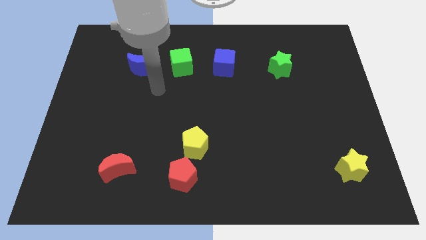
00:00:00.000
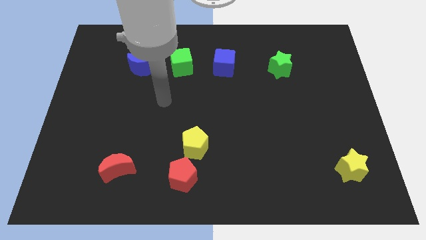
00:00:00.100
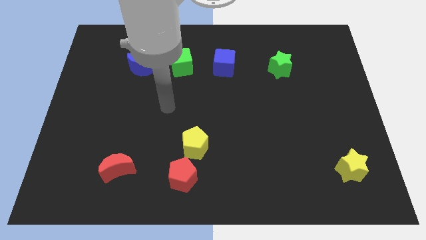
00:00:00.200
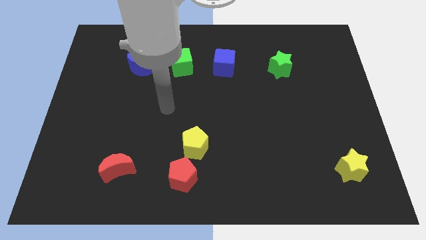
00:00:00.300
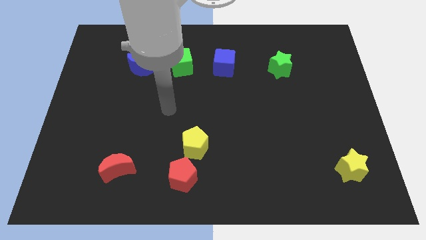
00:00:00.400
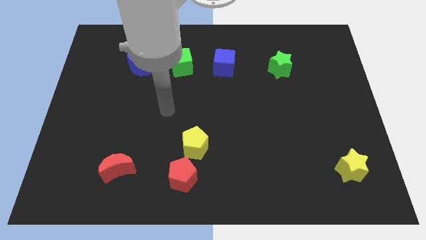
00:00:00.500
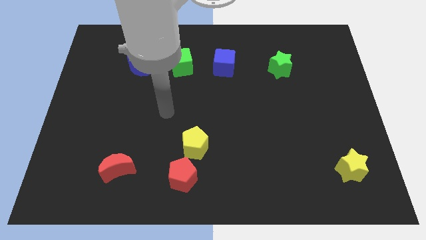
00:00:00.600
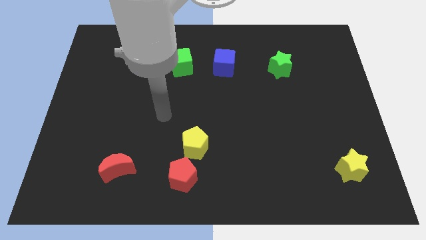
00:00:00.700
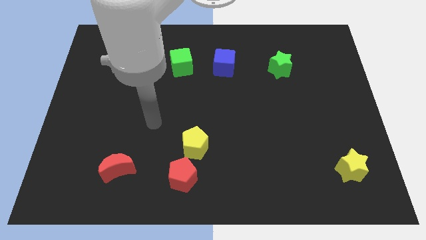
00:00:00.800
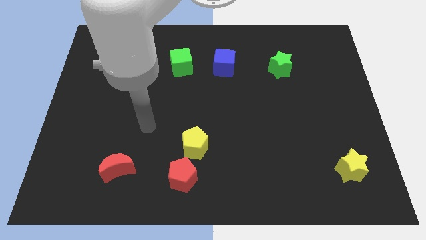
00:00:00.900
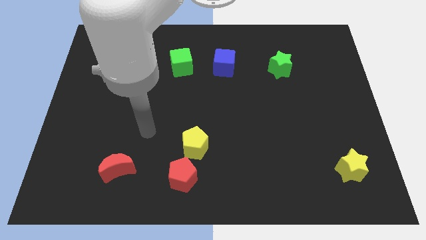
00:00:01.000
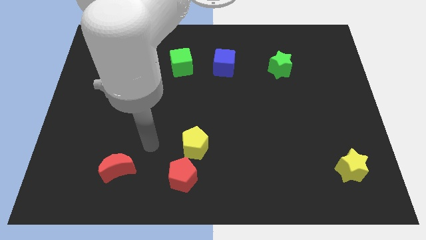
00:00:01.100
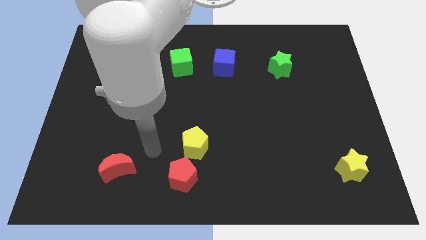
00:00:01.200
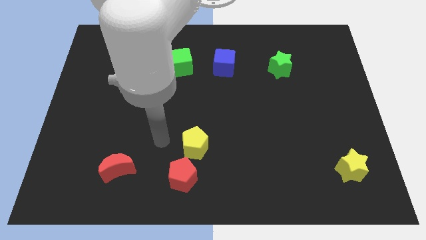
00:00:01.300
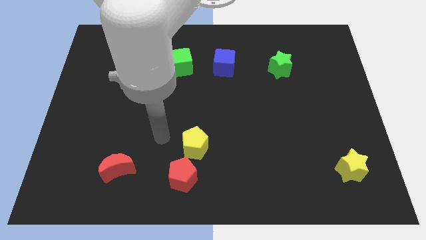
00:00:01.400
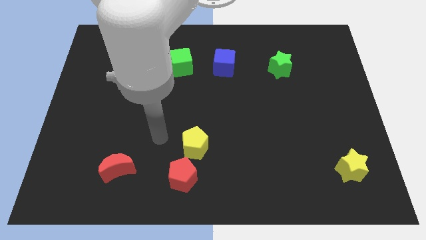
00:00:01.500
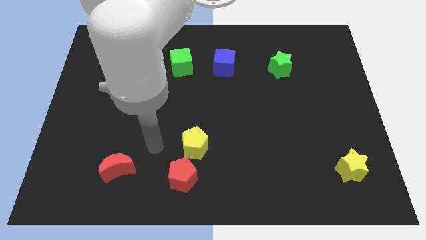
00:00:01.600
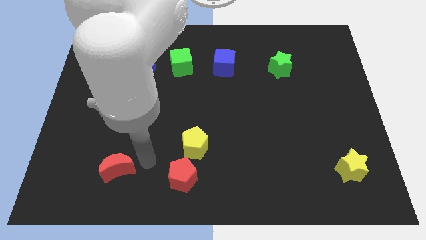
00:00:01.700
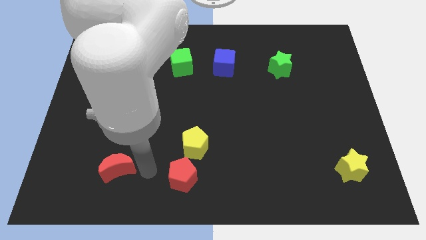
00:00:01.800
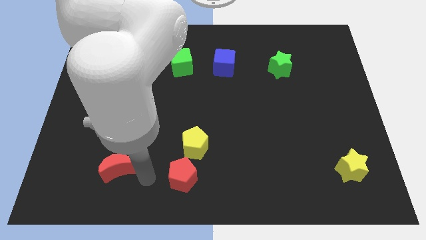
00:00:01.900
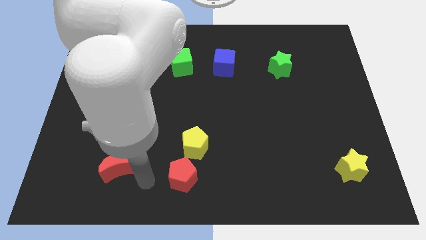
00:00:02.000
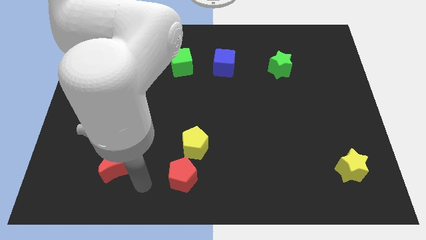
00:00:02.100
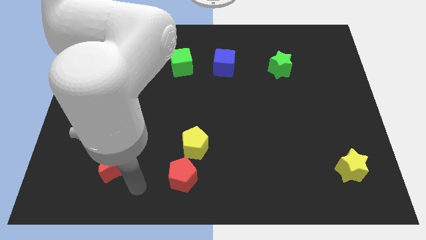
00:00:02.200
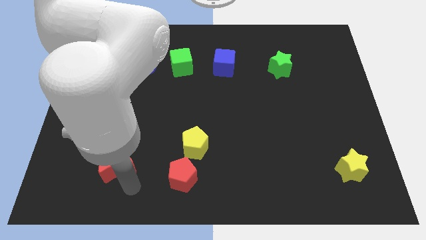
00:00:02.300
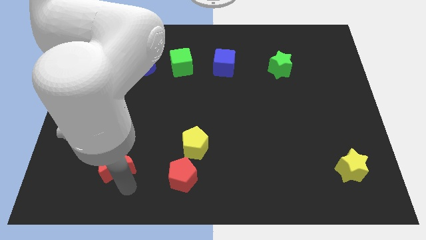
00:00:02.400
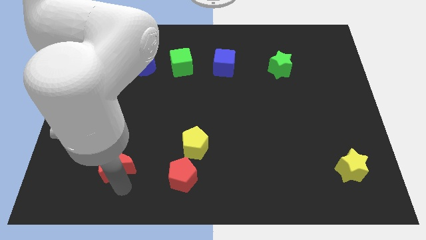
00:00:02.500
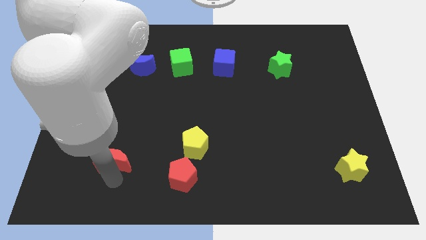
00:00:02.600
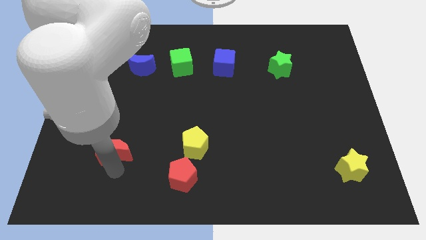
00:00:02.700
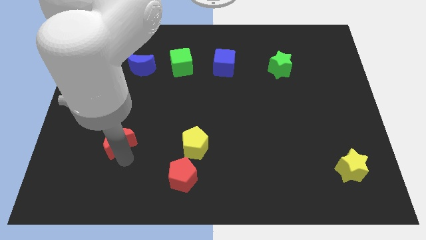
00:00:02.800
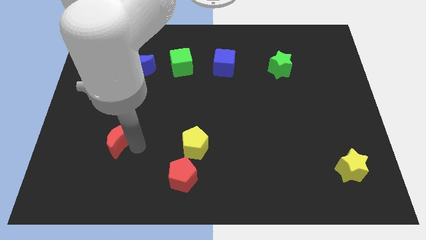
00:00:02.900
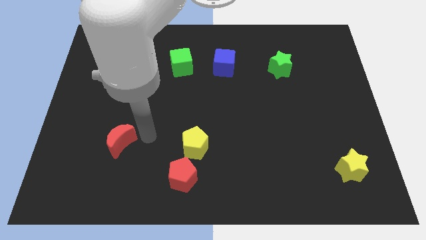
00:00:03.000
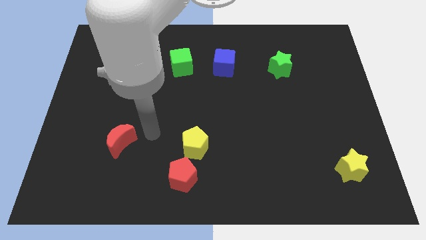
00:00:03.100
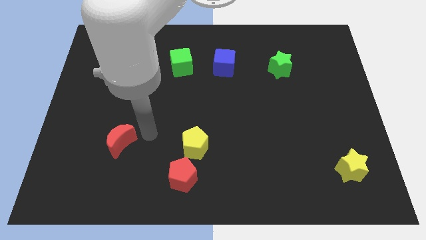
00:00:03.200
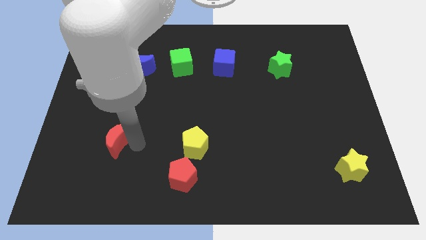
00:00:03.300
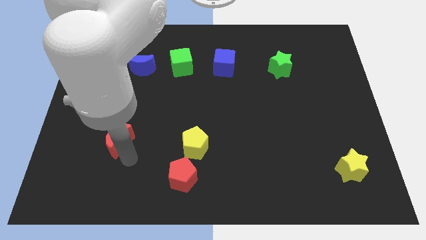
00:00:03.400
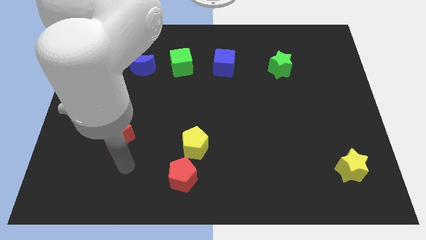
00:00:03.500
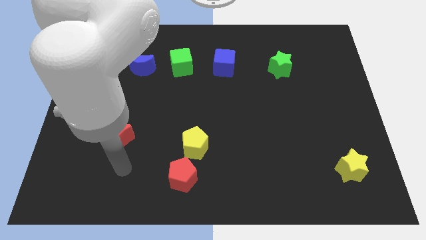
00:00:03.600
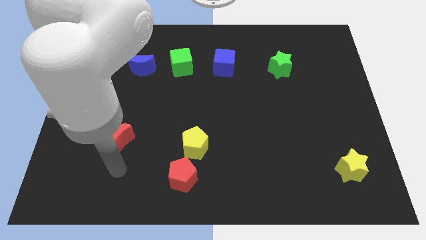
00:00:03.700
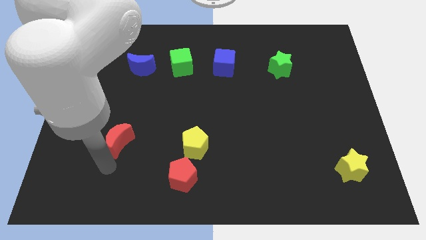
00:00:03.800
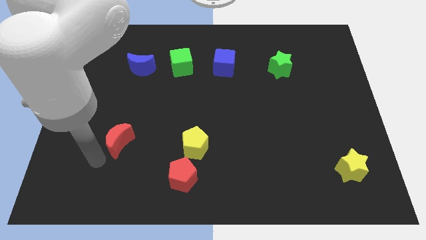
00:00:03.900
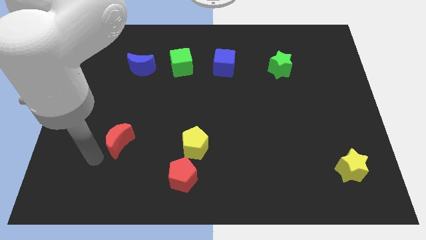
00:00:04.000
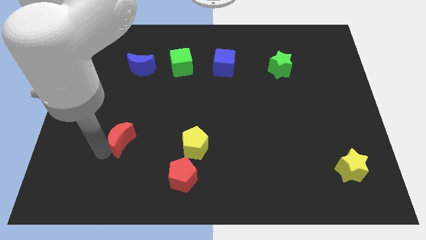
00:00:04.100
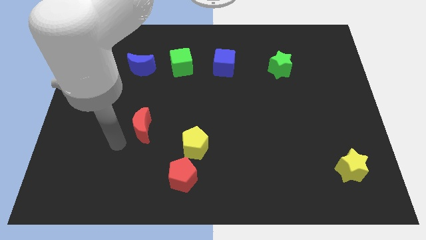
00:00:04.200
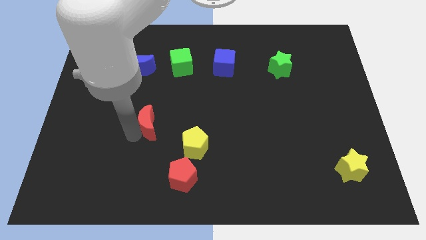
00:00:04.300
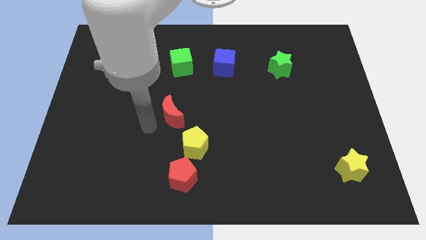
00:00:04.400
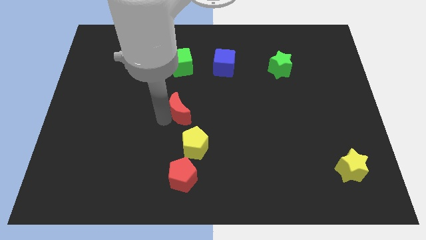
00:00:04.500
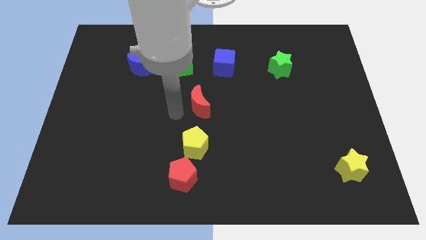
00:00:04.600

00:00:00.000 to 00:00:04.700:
move the red moon vertically above the yellow pentagon

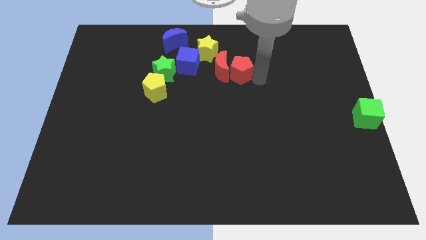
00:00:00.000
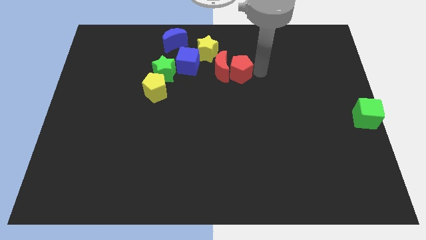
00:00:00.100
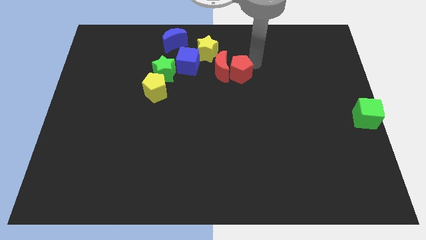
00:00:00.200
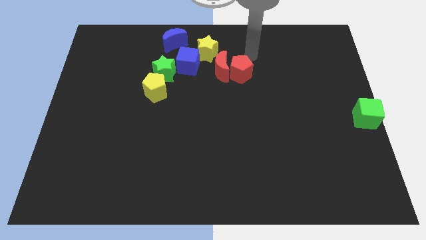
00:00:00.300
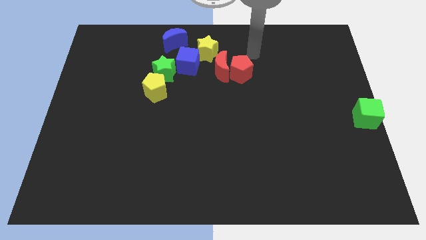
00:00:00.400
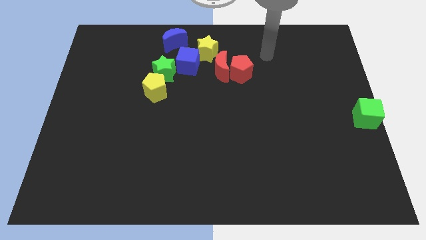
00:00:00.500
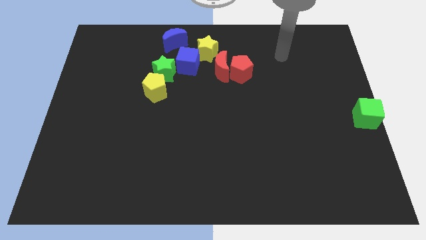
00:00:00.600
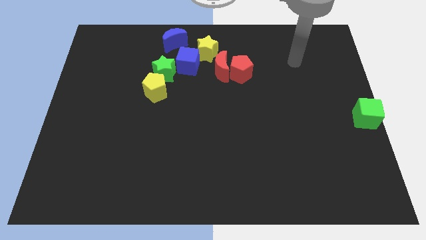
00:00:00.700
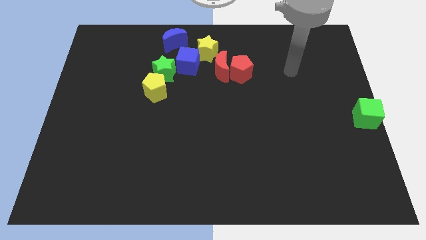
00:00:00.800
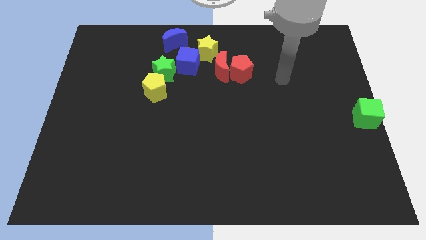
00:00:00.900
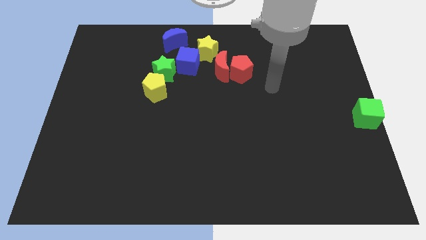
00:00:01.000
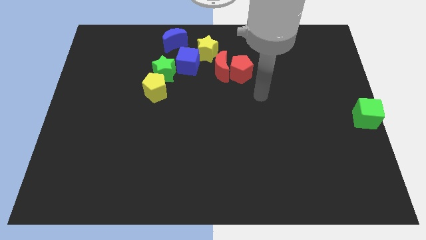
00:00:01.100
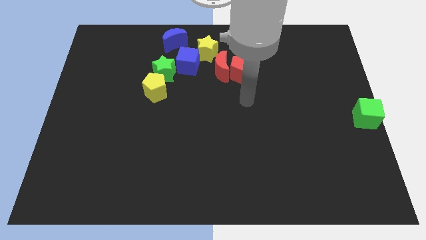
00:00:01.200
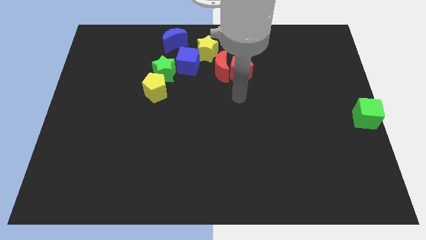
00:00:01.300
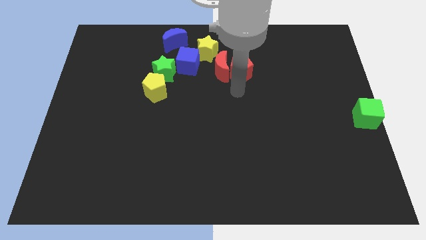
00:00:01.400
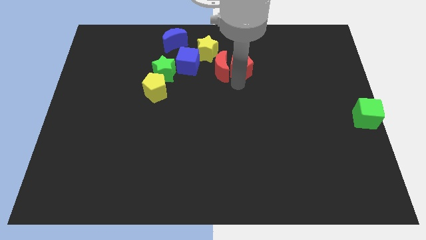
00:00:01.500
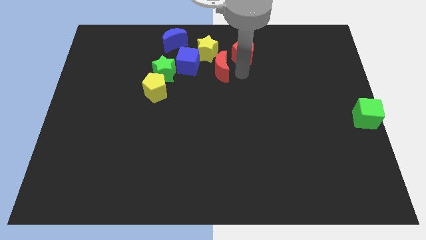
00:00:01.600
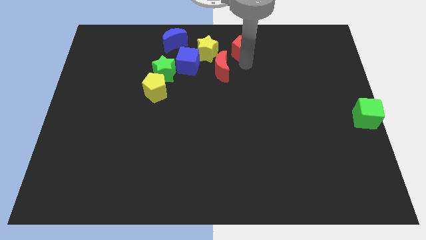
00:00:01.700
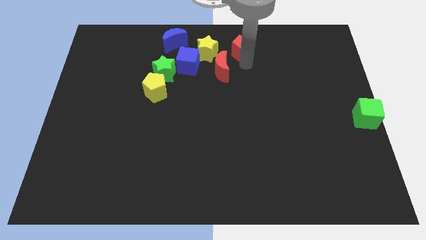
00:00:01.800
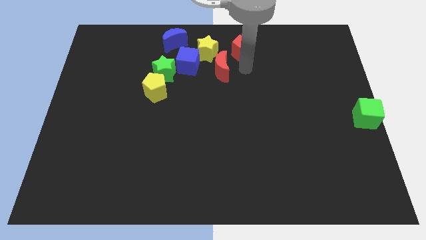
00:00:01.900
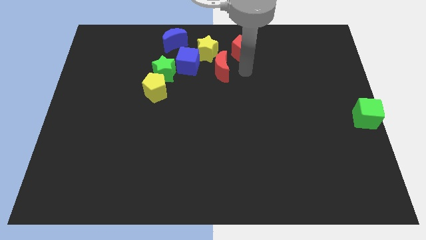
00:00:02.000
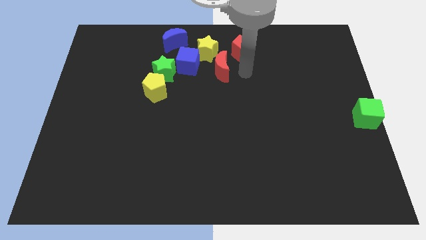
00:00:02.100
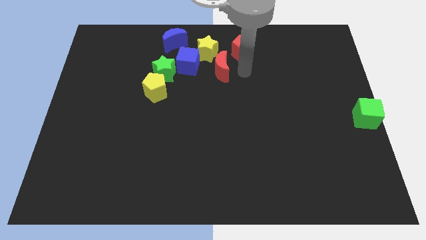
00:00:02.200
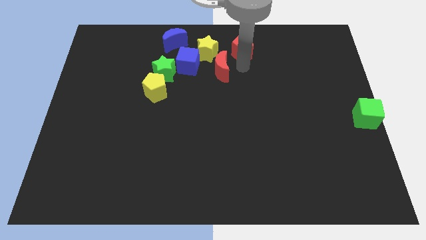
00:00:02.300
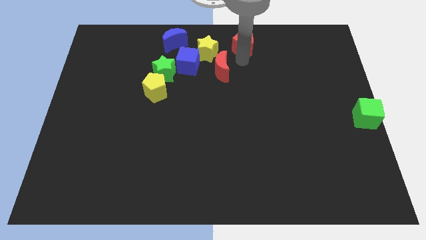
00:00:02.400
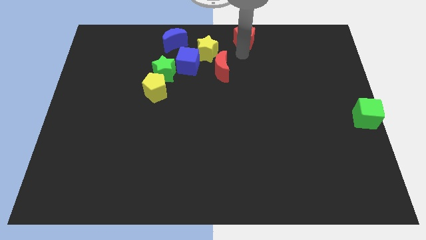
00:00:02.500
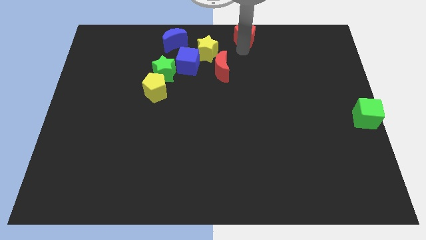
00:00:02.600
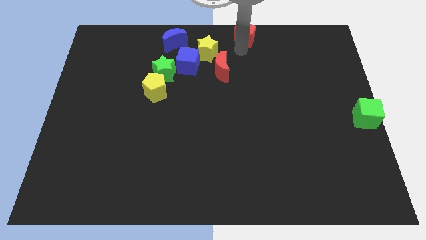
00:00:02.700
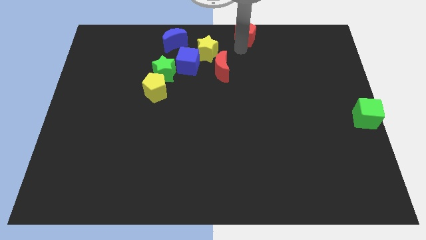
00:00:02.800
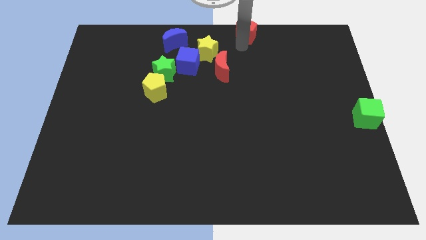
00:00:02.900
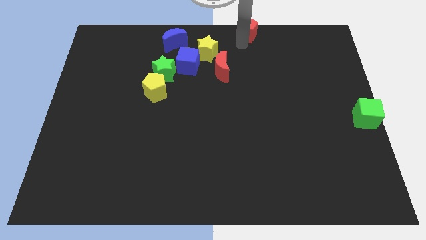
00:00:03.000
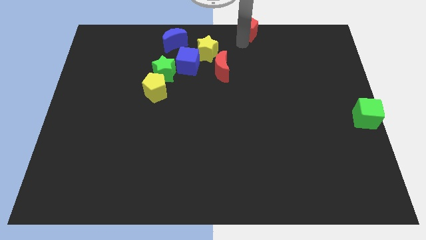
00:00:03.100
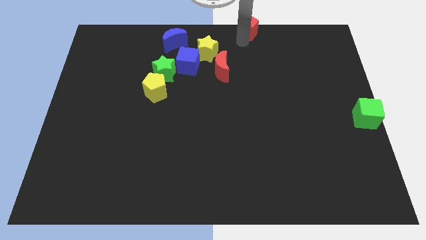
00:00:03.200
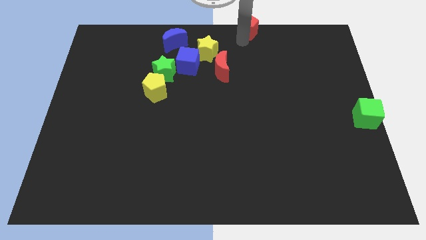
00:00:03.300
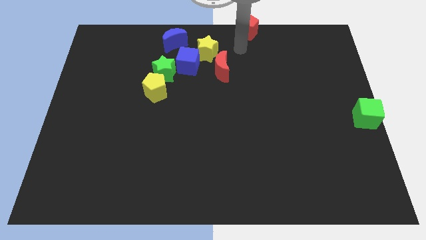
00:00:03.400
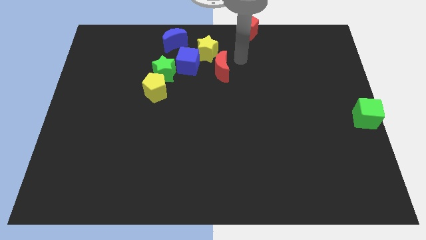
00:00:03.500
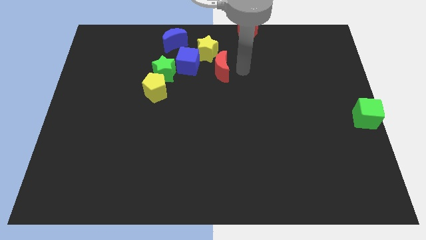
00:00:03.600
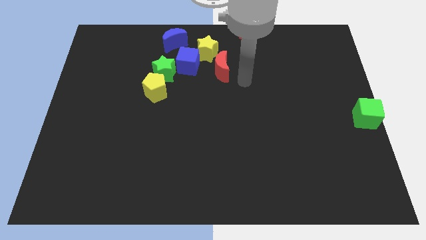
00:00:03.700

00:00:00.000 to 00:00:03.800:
place the red pentagon at the top center of the board

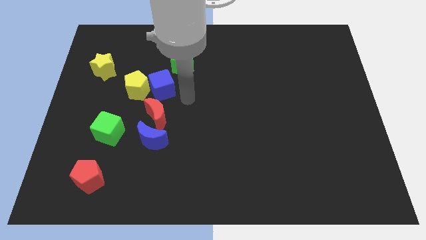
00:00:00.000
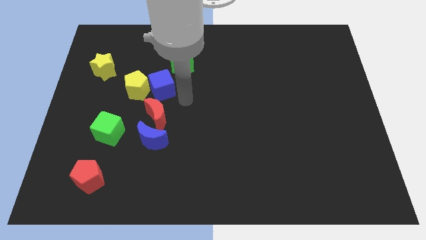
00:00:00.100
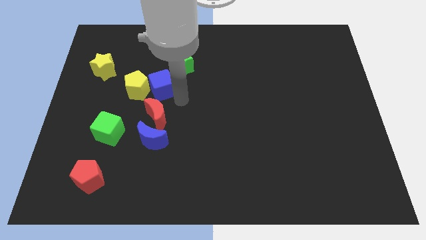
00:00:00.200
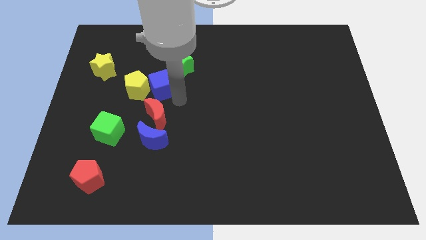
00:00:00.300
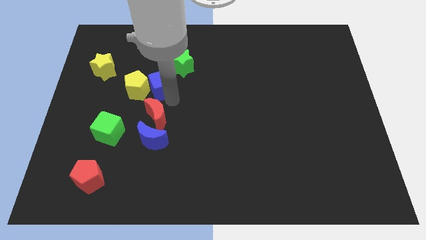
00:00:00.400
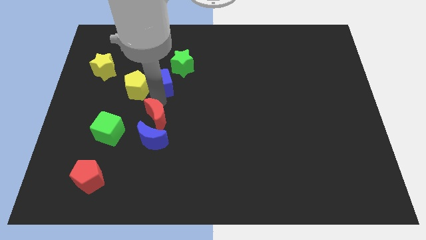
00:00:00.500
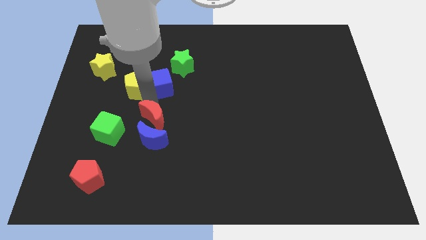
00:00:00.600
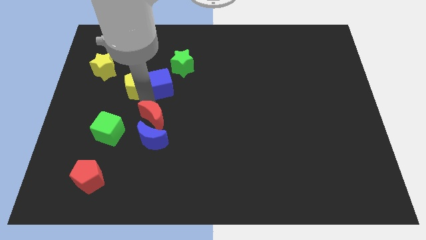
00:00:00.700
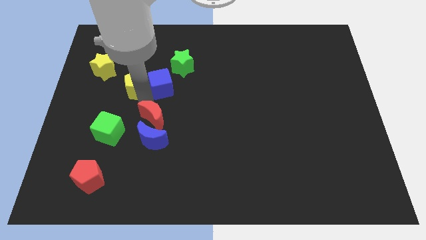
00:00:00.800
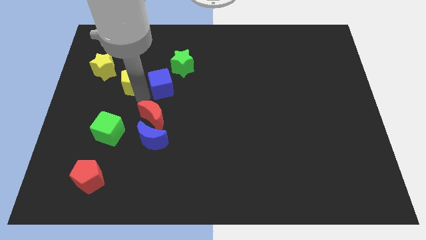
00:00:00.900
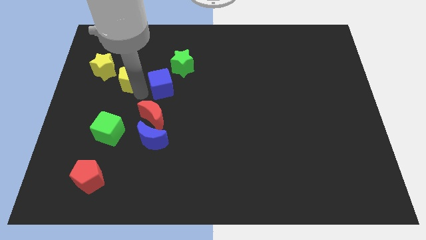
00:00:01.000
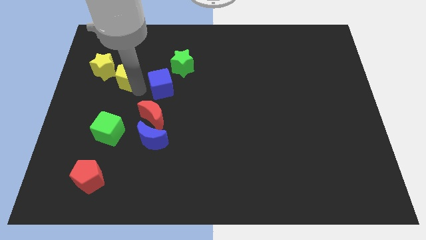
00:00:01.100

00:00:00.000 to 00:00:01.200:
separate yellow pentagon from the blue cube
